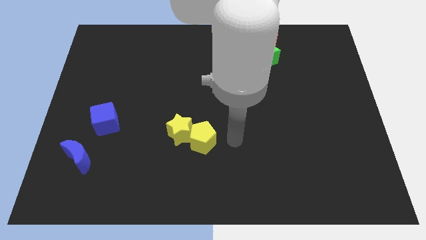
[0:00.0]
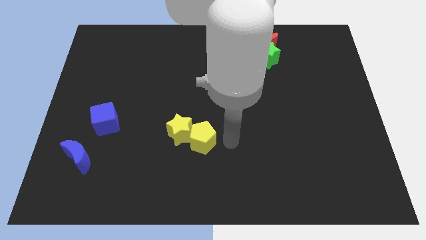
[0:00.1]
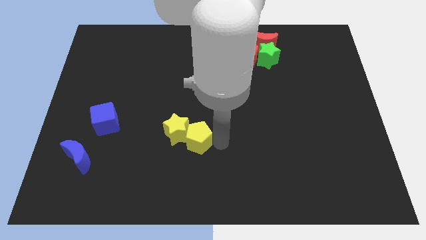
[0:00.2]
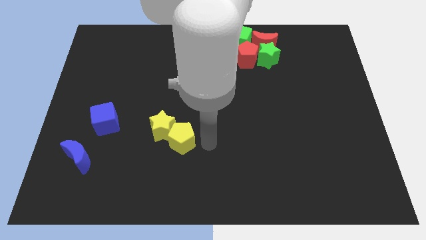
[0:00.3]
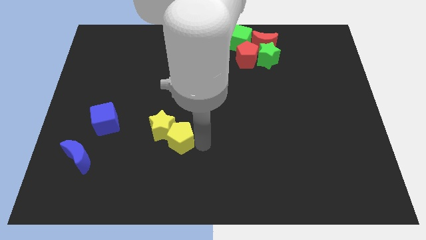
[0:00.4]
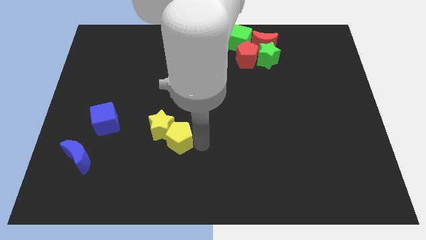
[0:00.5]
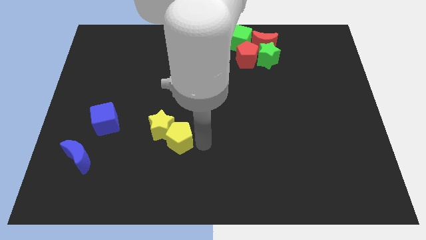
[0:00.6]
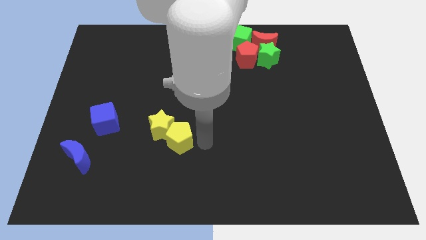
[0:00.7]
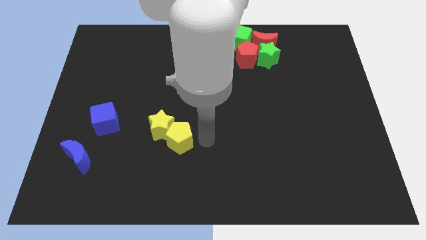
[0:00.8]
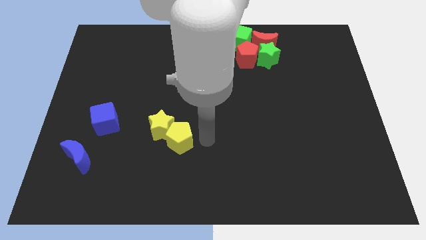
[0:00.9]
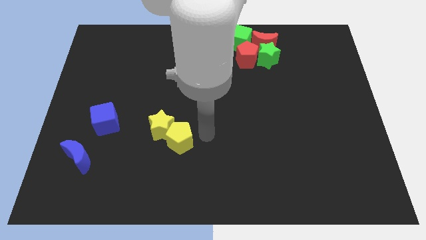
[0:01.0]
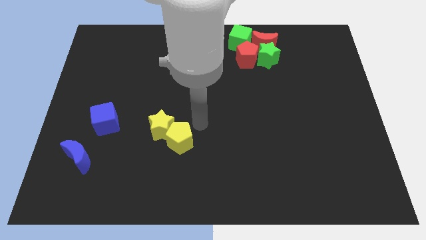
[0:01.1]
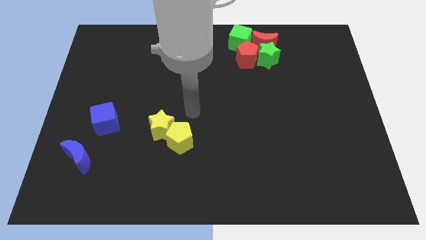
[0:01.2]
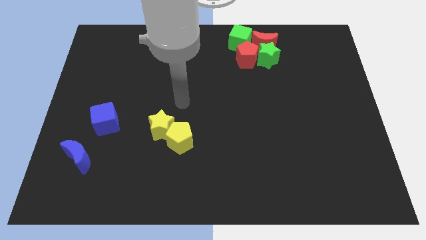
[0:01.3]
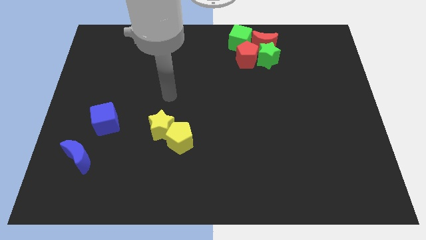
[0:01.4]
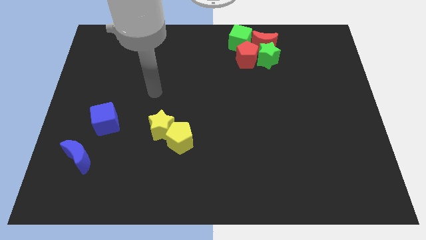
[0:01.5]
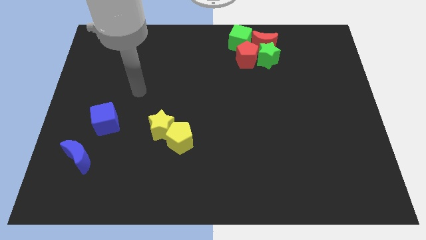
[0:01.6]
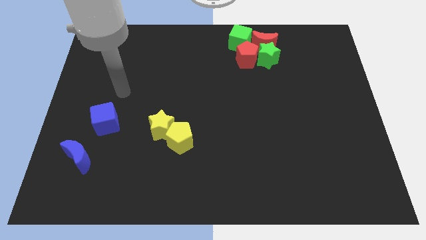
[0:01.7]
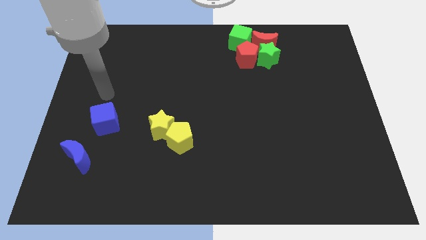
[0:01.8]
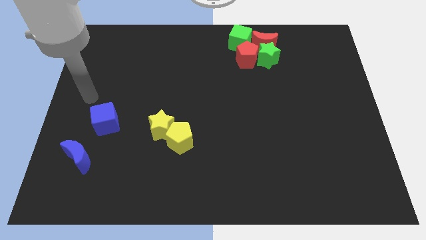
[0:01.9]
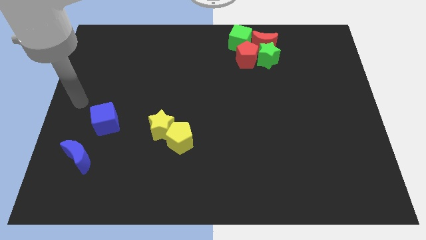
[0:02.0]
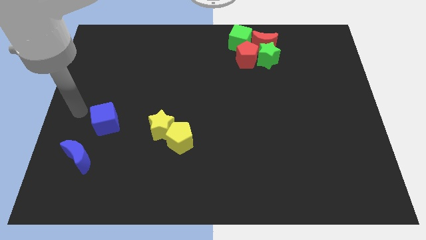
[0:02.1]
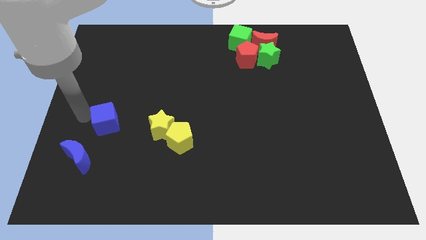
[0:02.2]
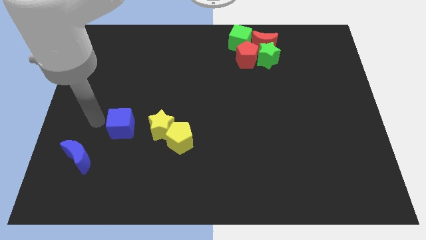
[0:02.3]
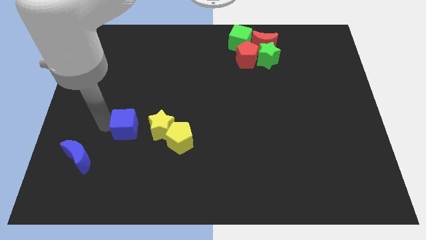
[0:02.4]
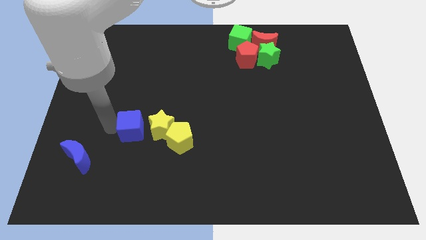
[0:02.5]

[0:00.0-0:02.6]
push blue cube left to the yellow star

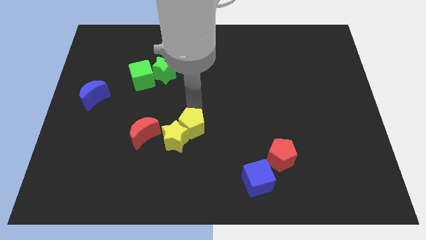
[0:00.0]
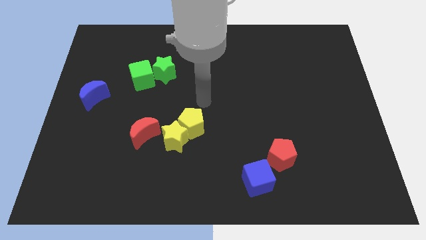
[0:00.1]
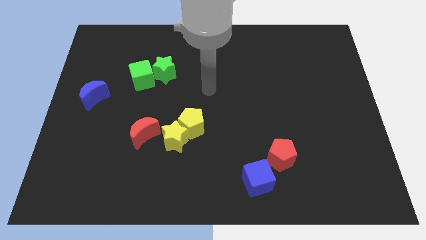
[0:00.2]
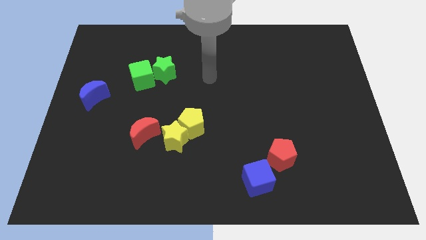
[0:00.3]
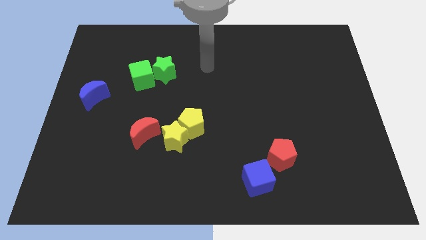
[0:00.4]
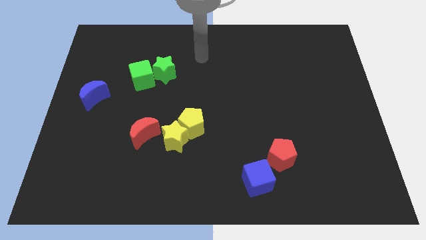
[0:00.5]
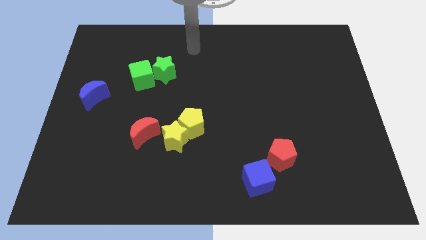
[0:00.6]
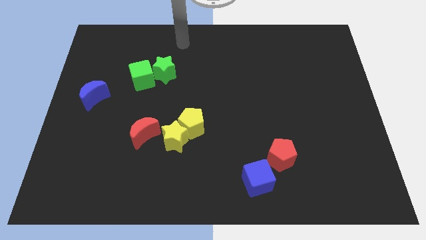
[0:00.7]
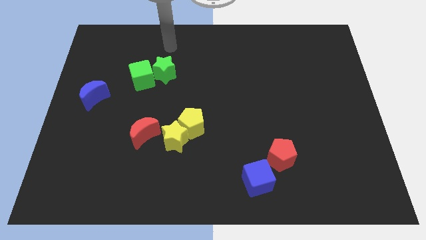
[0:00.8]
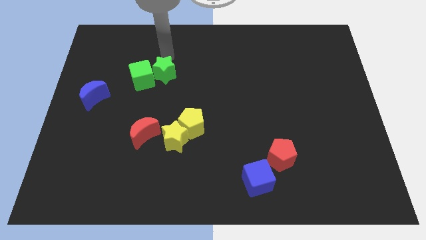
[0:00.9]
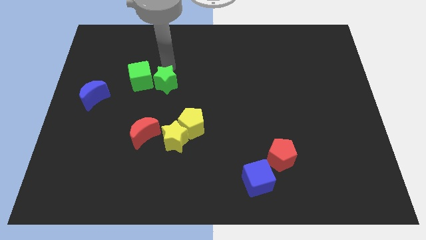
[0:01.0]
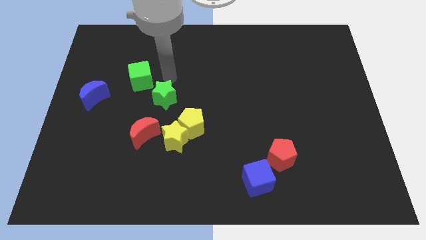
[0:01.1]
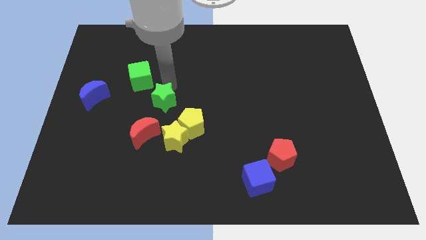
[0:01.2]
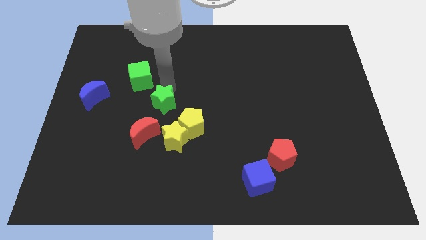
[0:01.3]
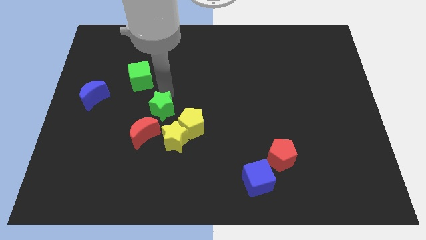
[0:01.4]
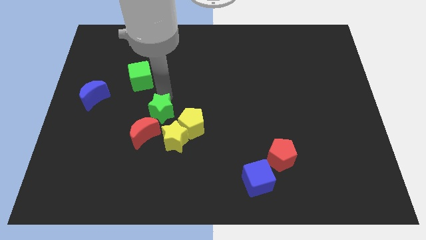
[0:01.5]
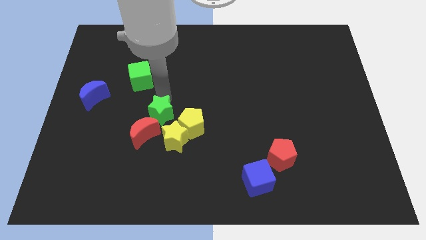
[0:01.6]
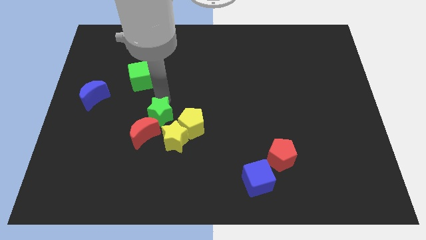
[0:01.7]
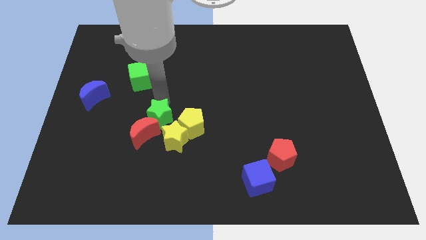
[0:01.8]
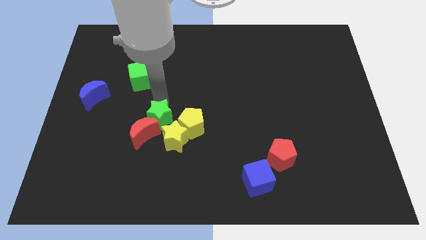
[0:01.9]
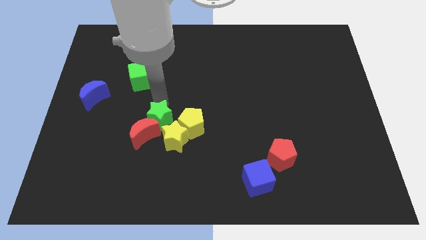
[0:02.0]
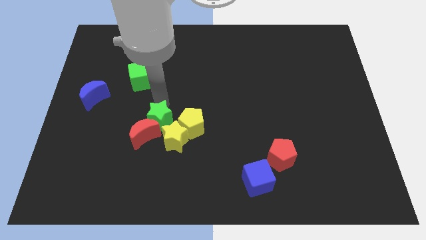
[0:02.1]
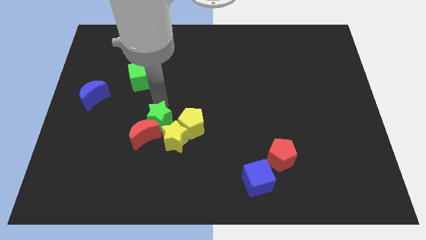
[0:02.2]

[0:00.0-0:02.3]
push the green star close to the yellow pentagon

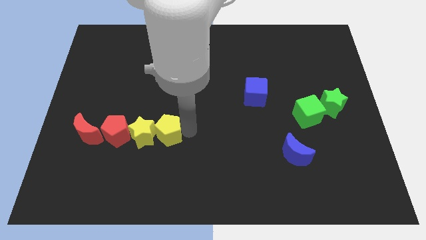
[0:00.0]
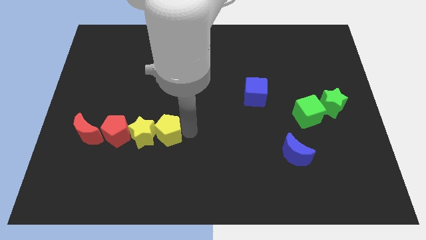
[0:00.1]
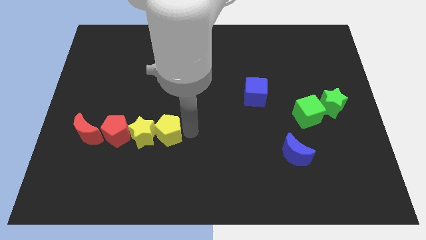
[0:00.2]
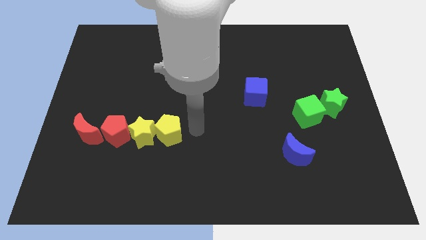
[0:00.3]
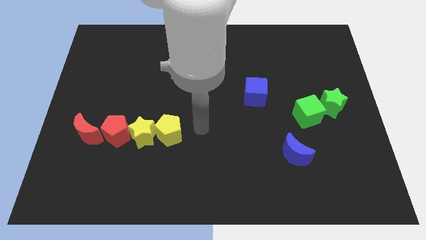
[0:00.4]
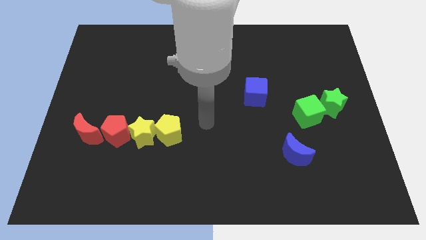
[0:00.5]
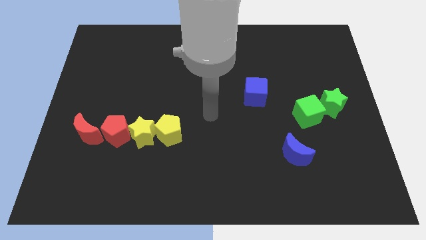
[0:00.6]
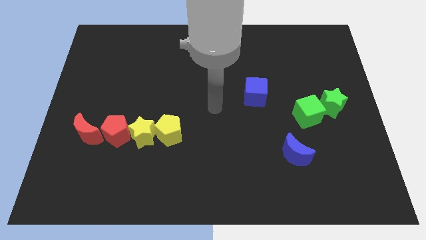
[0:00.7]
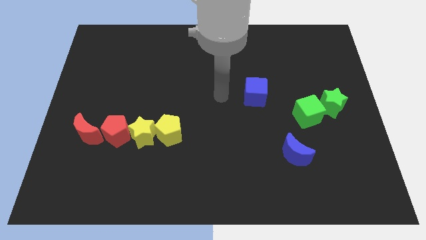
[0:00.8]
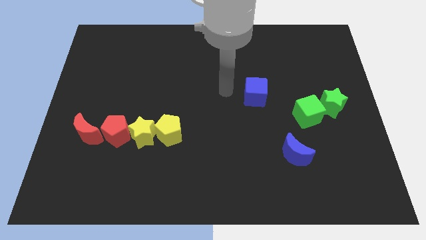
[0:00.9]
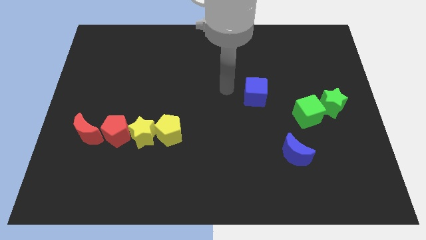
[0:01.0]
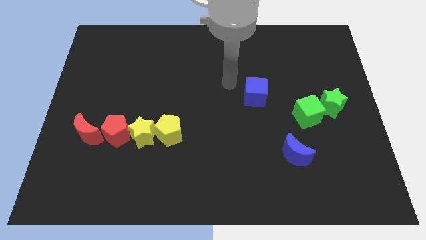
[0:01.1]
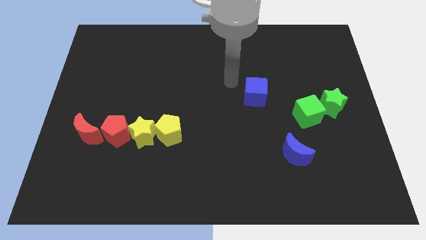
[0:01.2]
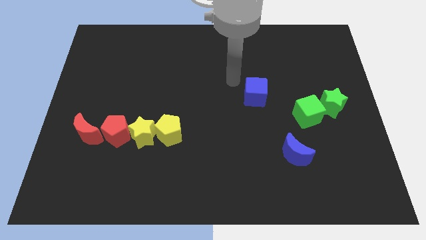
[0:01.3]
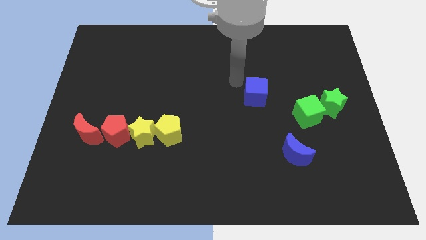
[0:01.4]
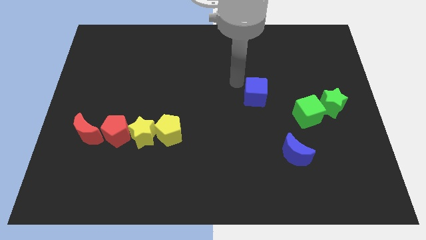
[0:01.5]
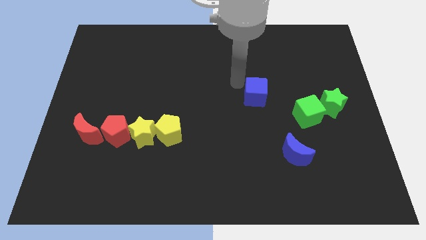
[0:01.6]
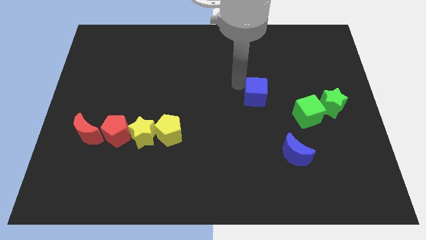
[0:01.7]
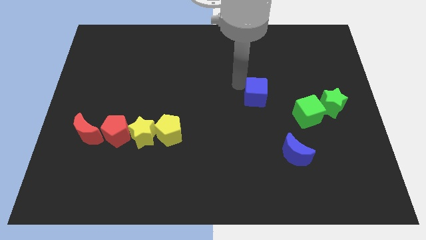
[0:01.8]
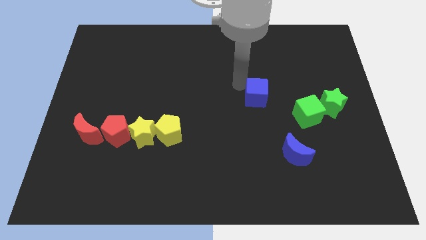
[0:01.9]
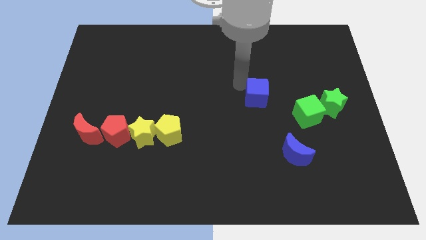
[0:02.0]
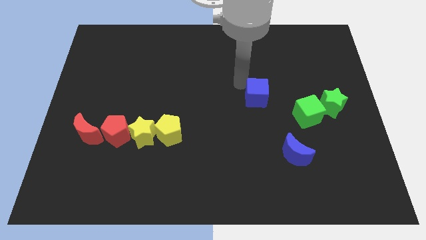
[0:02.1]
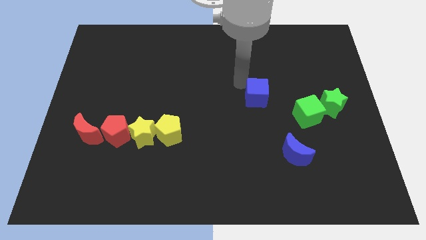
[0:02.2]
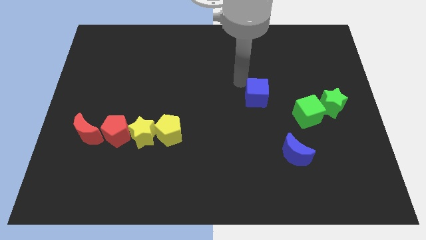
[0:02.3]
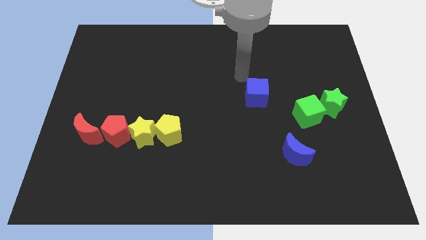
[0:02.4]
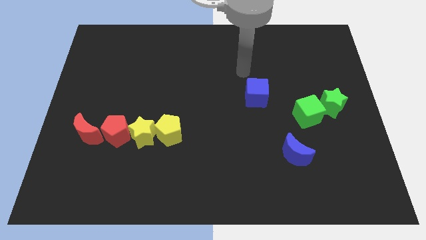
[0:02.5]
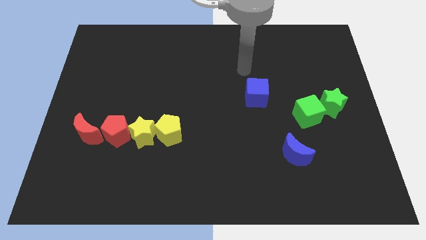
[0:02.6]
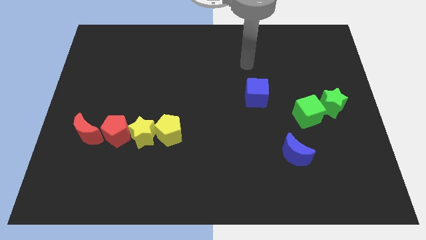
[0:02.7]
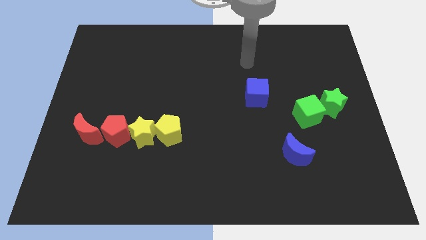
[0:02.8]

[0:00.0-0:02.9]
move your arm towards the top of the blue cube

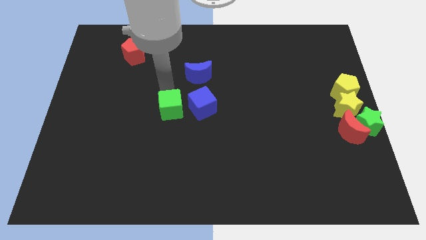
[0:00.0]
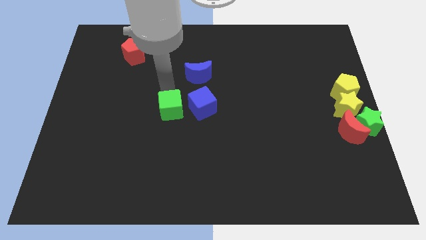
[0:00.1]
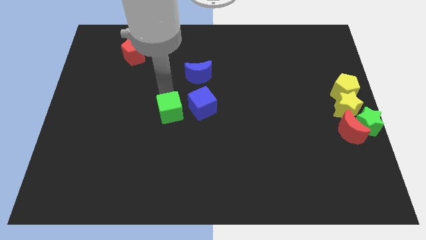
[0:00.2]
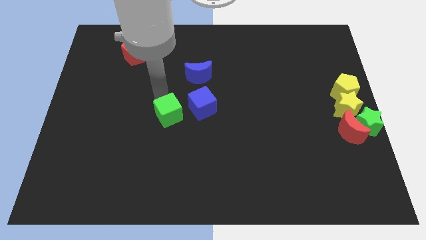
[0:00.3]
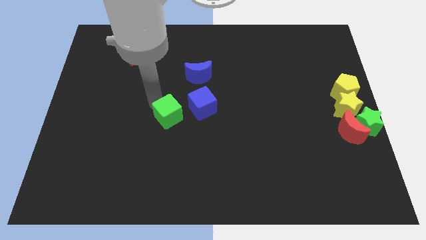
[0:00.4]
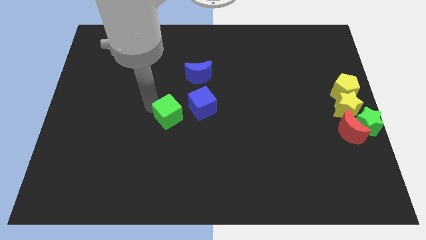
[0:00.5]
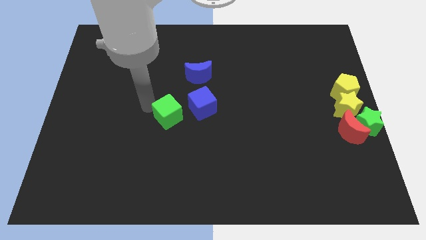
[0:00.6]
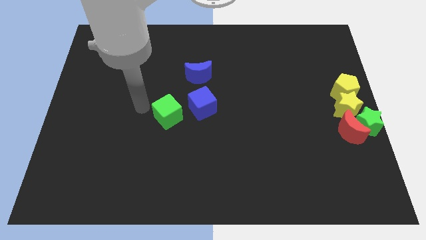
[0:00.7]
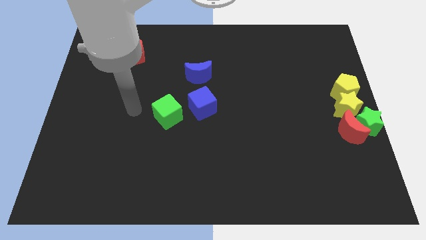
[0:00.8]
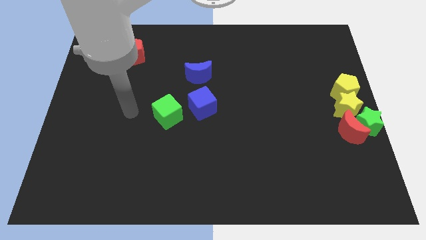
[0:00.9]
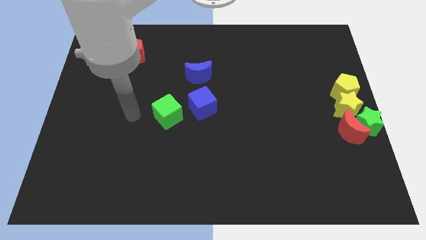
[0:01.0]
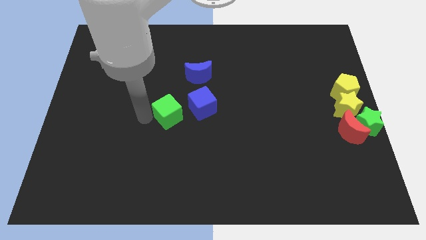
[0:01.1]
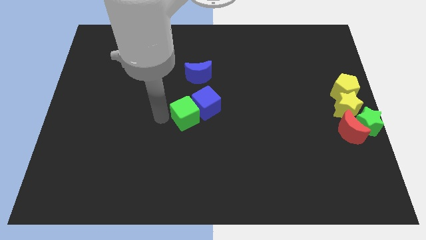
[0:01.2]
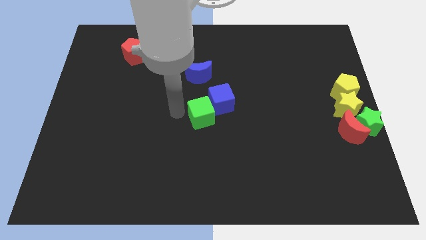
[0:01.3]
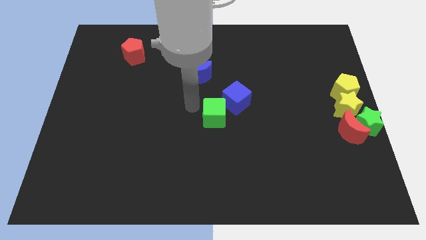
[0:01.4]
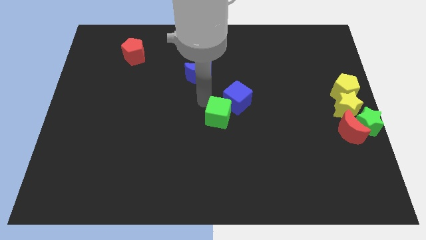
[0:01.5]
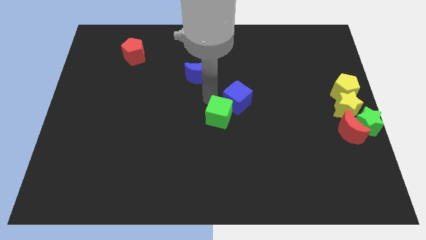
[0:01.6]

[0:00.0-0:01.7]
move the green cube into the blue cube
